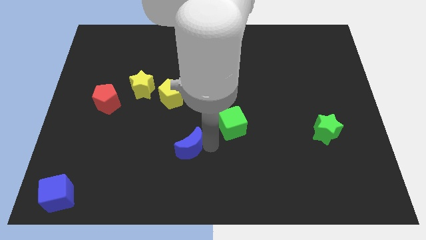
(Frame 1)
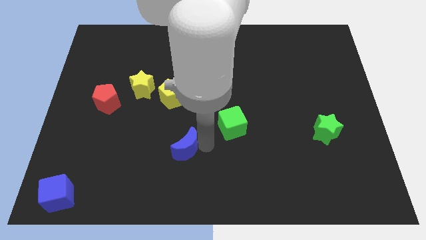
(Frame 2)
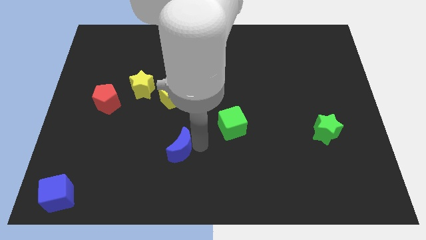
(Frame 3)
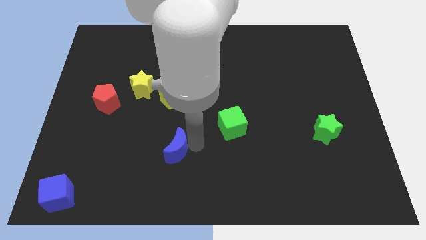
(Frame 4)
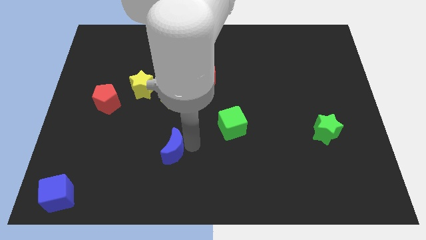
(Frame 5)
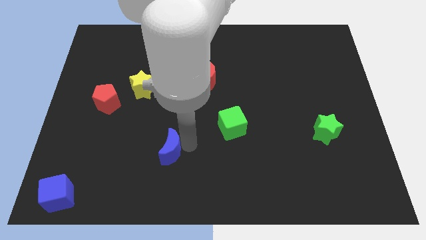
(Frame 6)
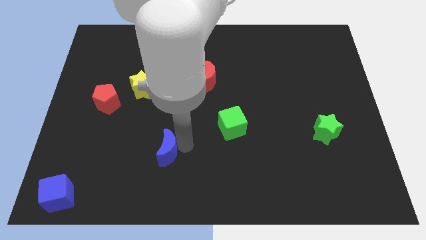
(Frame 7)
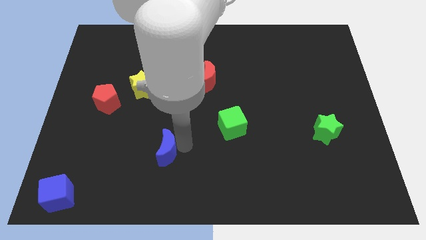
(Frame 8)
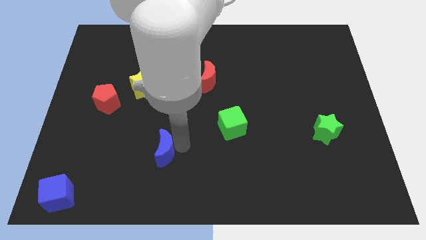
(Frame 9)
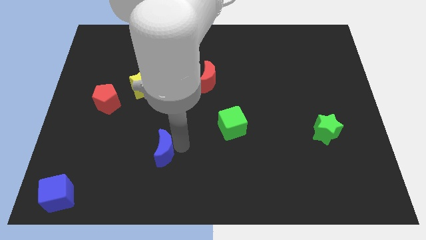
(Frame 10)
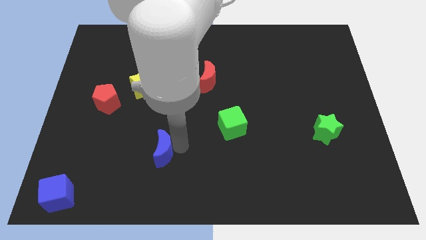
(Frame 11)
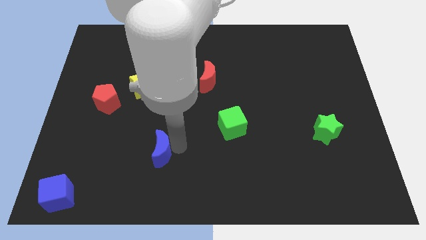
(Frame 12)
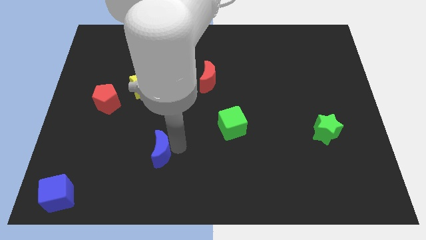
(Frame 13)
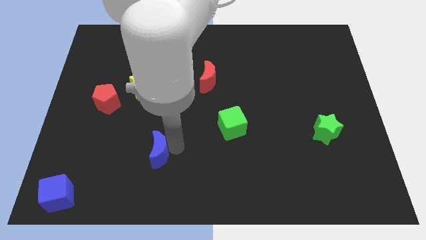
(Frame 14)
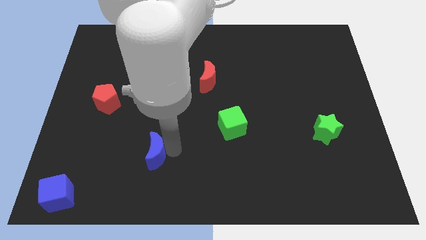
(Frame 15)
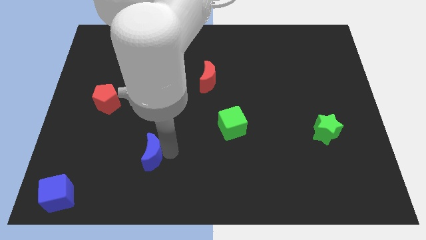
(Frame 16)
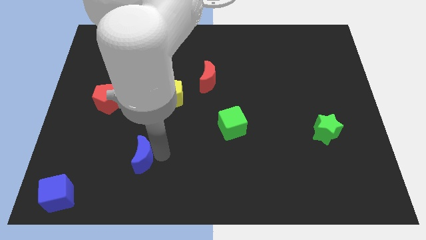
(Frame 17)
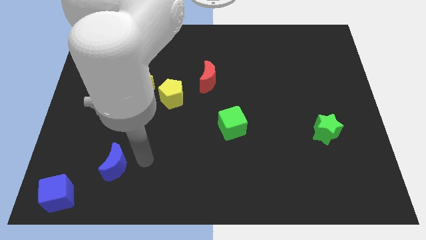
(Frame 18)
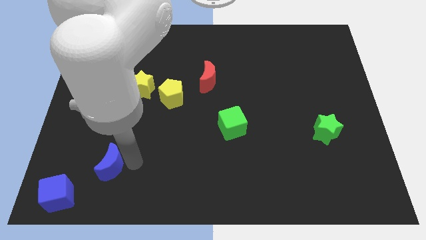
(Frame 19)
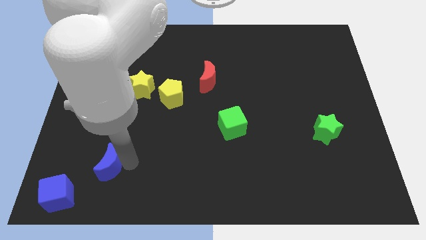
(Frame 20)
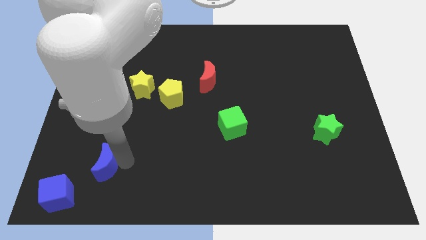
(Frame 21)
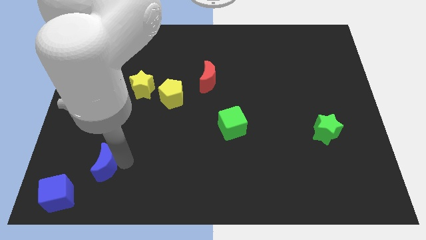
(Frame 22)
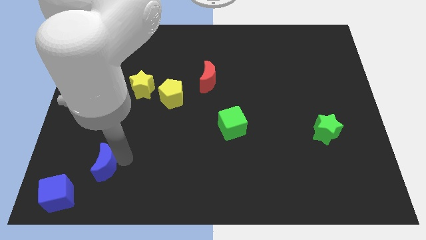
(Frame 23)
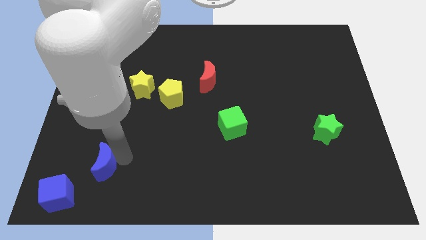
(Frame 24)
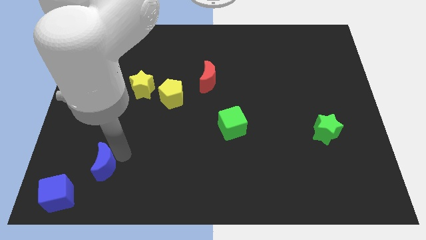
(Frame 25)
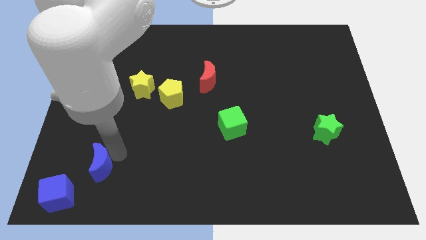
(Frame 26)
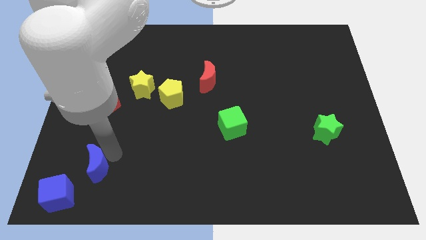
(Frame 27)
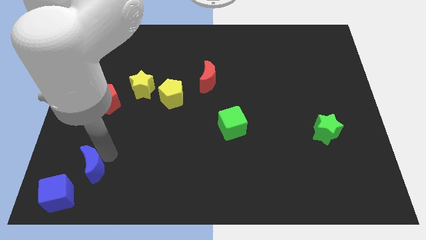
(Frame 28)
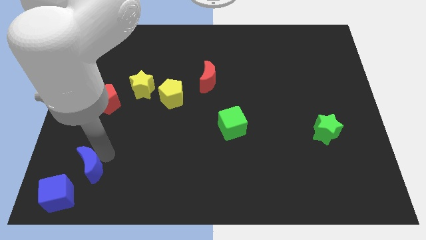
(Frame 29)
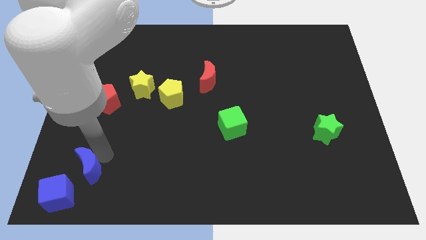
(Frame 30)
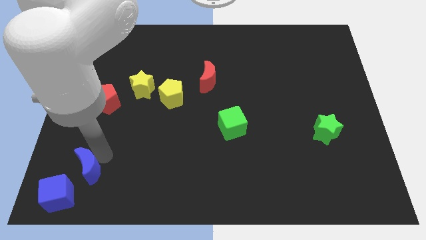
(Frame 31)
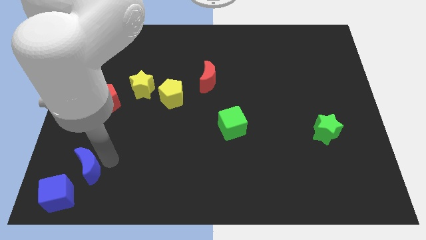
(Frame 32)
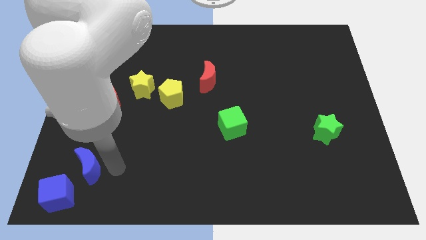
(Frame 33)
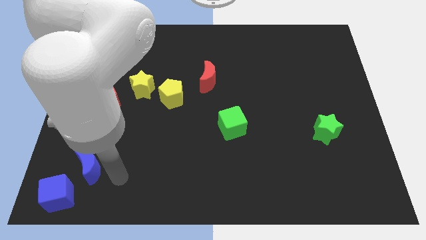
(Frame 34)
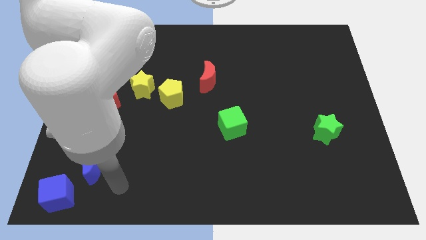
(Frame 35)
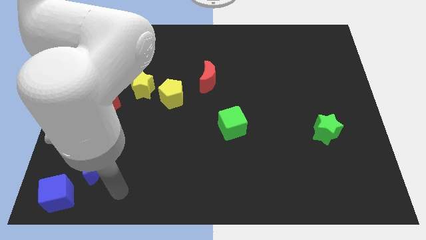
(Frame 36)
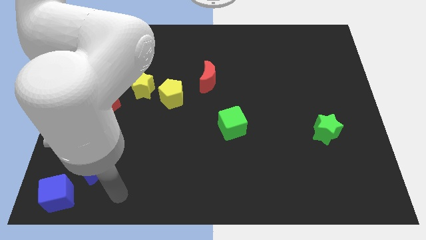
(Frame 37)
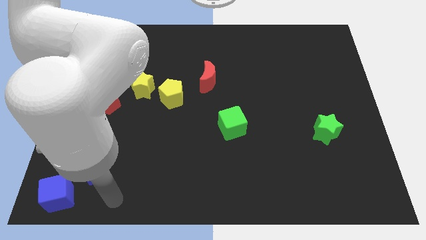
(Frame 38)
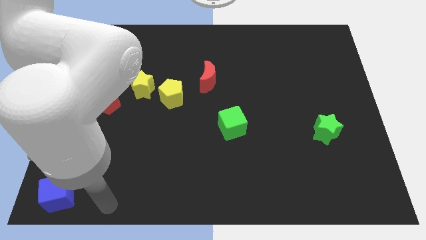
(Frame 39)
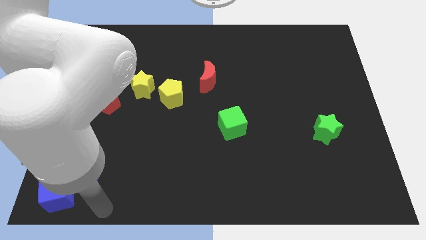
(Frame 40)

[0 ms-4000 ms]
move the blue moon near to the blue cube

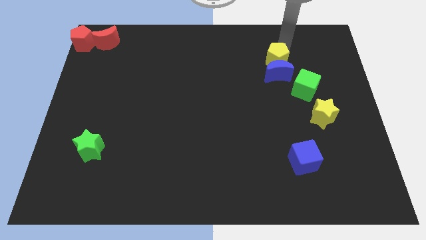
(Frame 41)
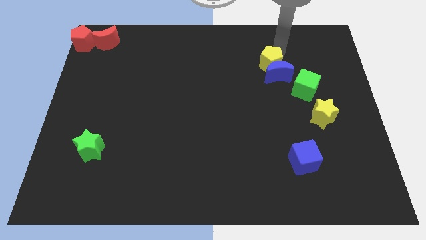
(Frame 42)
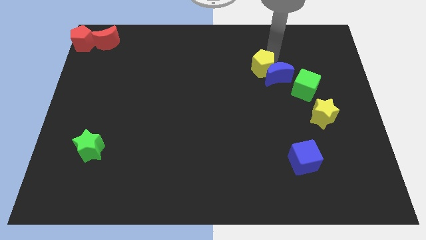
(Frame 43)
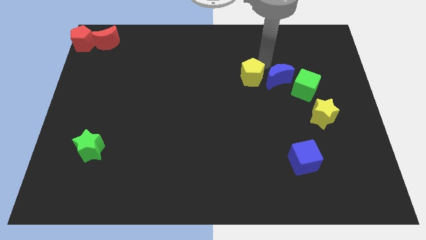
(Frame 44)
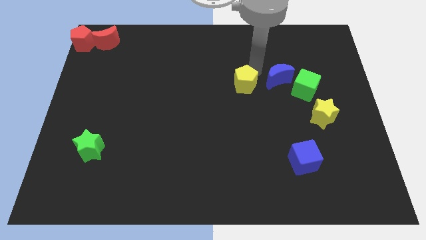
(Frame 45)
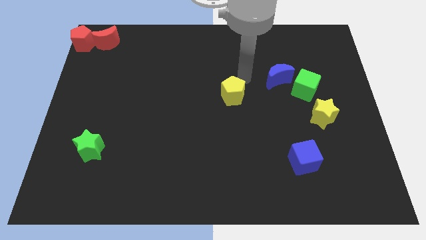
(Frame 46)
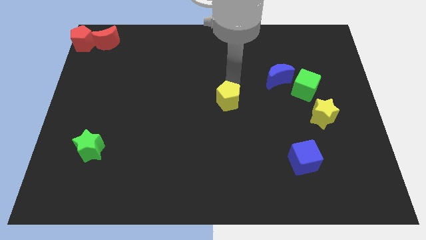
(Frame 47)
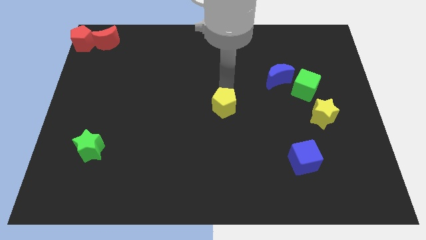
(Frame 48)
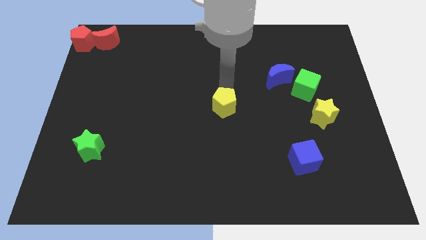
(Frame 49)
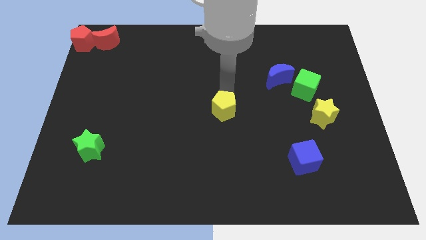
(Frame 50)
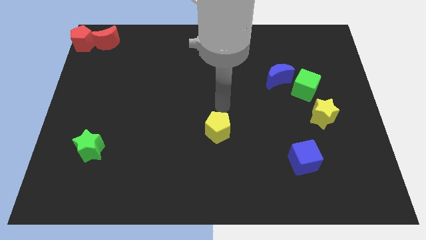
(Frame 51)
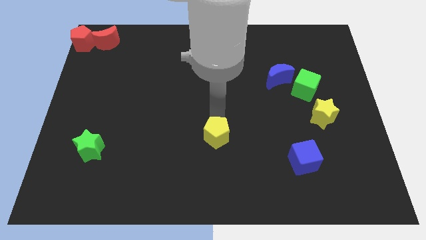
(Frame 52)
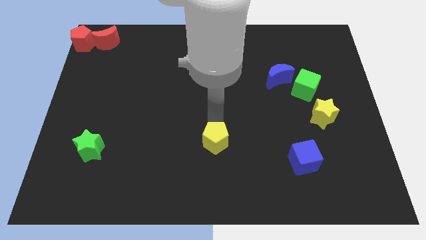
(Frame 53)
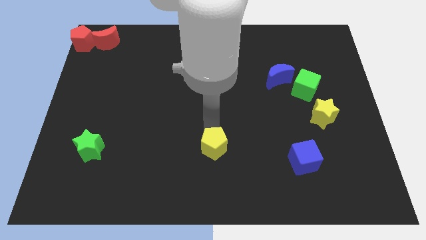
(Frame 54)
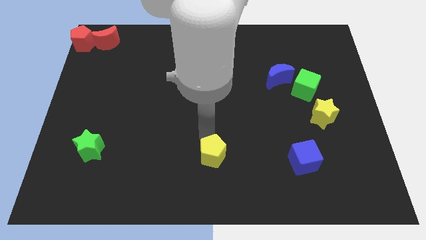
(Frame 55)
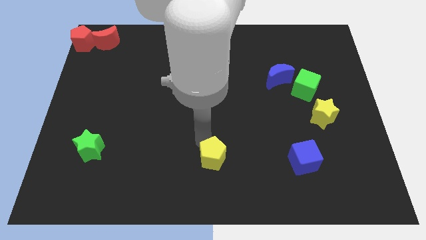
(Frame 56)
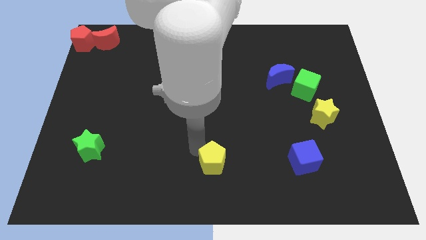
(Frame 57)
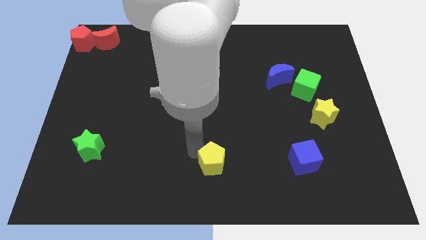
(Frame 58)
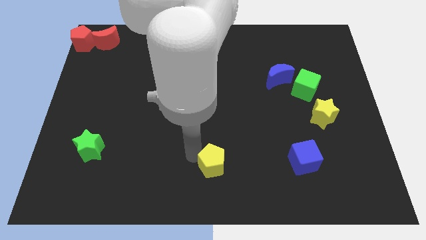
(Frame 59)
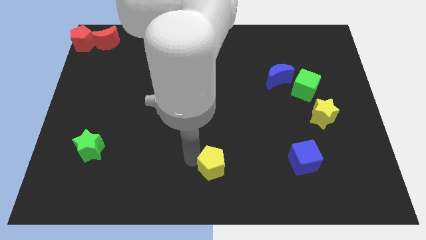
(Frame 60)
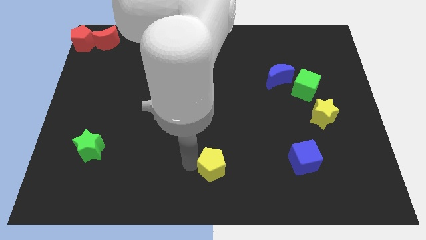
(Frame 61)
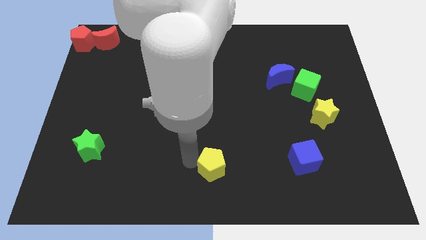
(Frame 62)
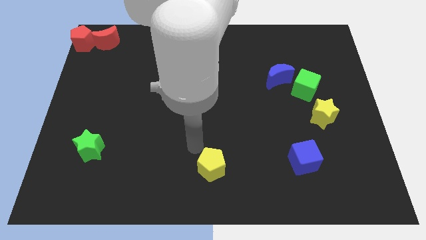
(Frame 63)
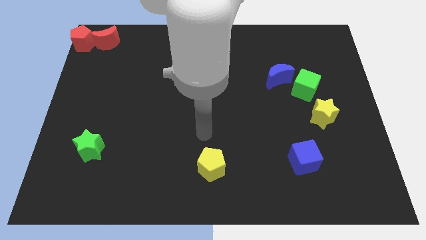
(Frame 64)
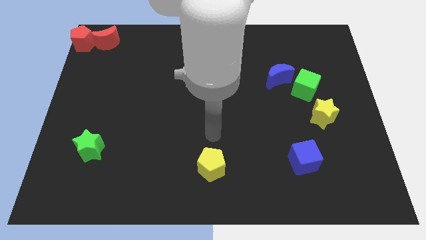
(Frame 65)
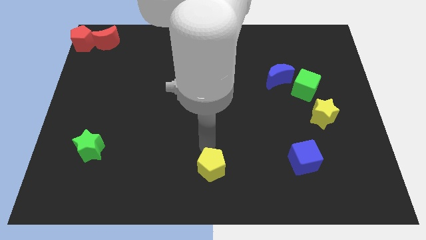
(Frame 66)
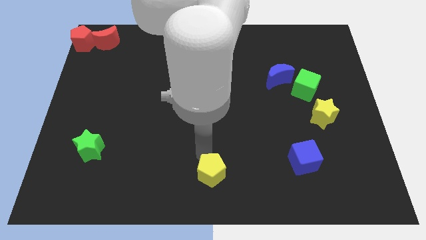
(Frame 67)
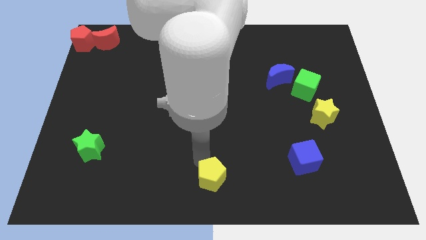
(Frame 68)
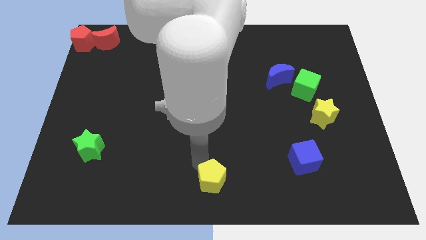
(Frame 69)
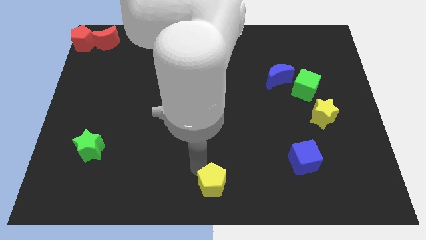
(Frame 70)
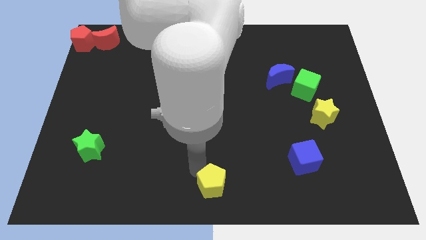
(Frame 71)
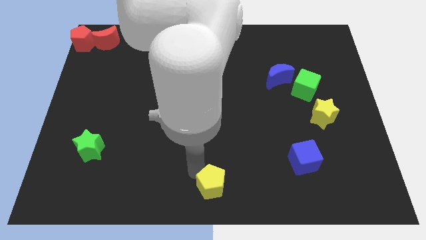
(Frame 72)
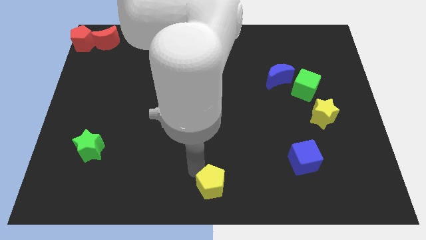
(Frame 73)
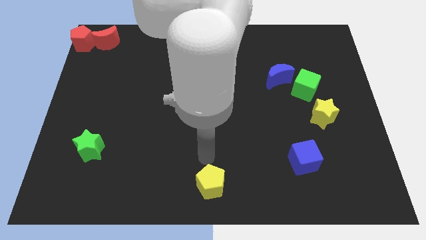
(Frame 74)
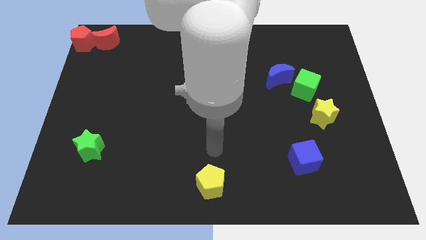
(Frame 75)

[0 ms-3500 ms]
separate yellow pentagon from the blue moon

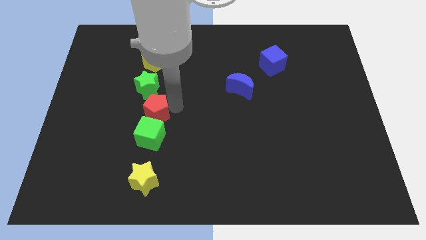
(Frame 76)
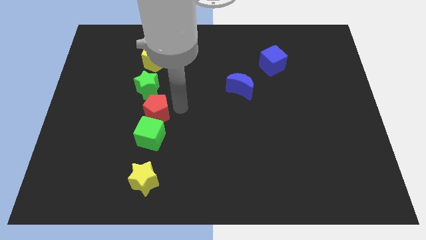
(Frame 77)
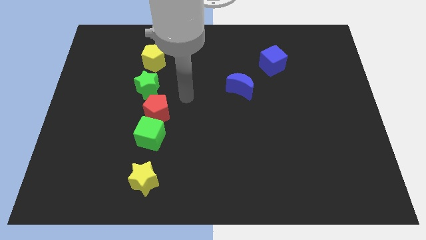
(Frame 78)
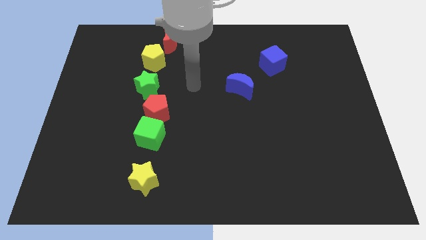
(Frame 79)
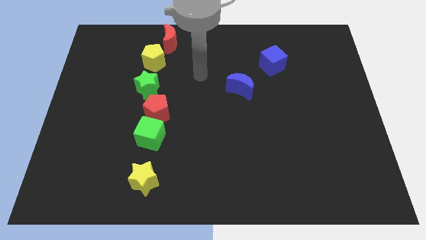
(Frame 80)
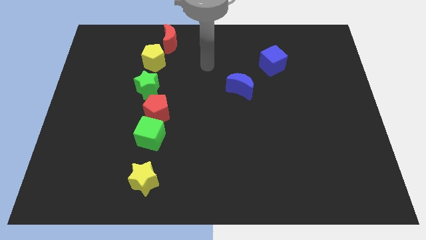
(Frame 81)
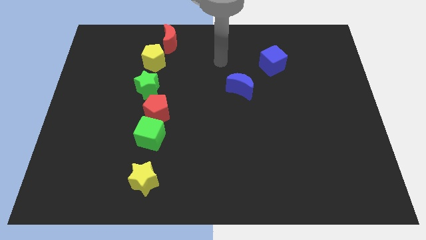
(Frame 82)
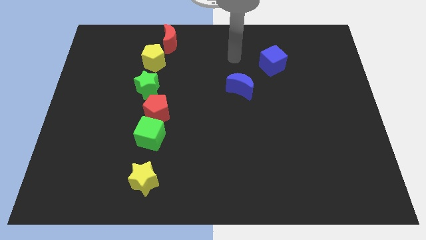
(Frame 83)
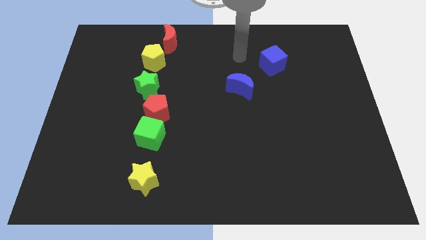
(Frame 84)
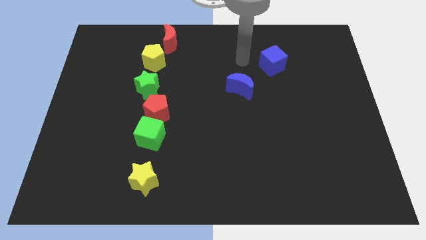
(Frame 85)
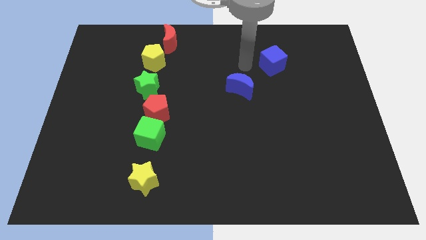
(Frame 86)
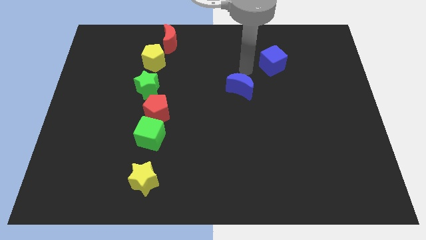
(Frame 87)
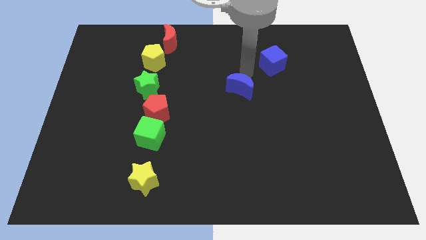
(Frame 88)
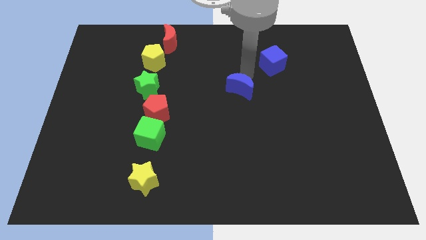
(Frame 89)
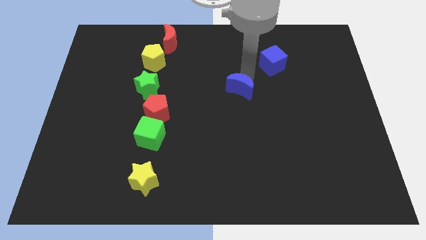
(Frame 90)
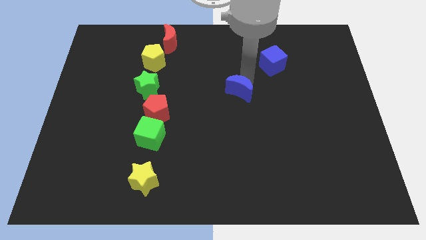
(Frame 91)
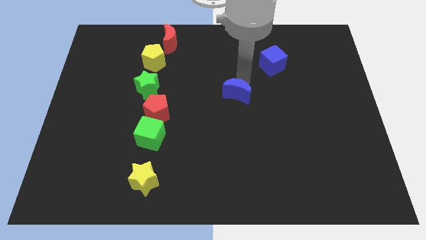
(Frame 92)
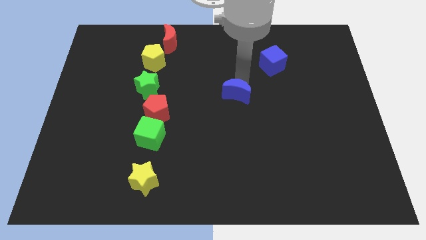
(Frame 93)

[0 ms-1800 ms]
move your arm away from the red pentagon
